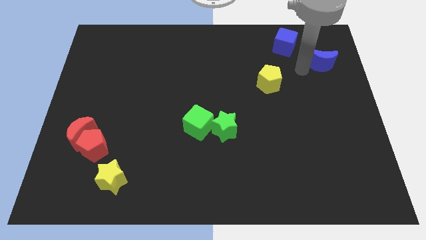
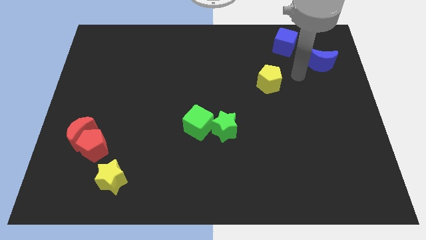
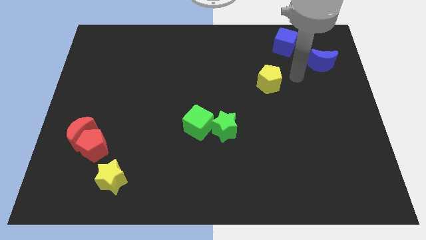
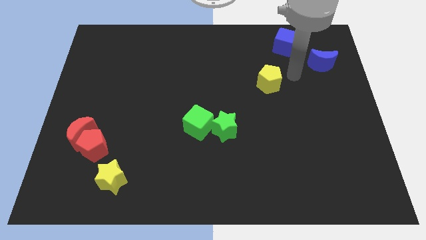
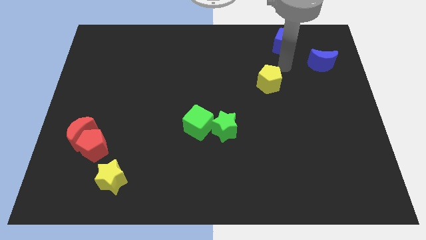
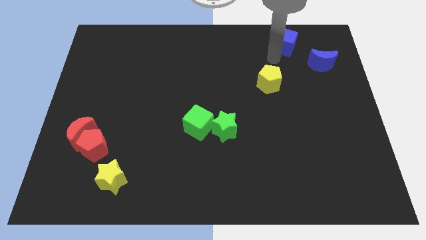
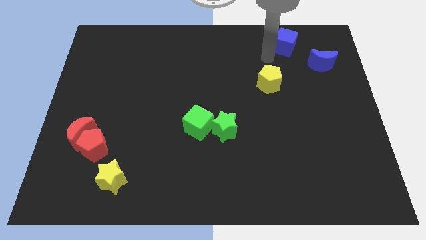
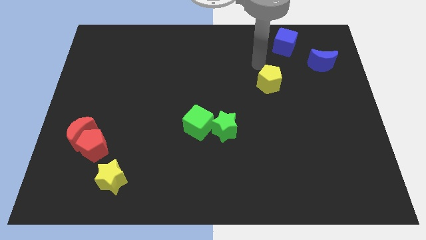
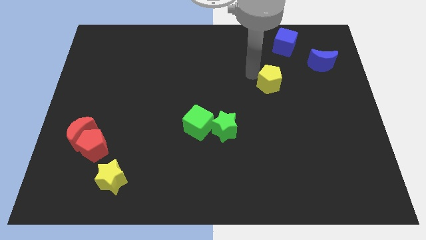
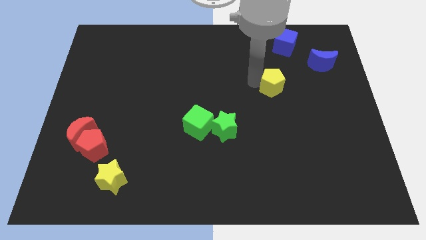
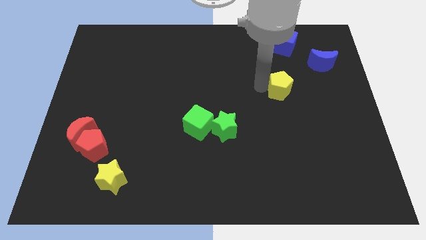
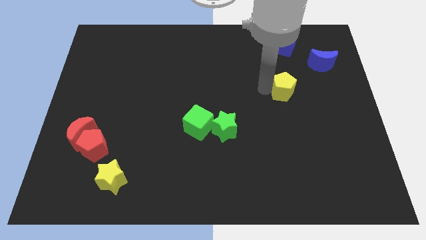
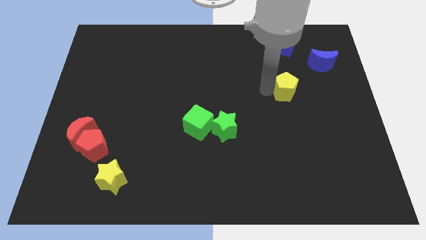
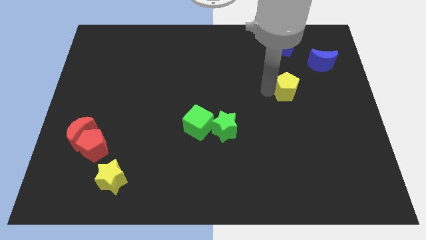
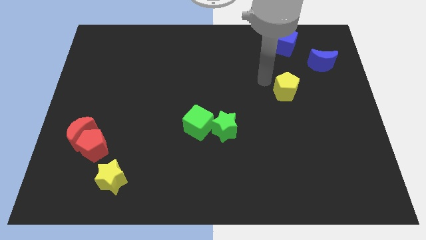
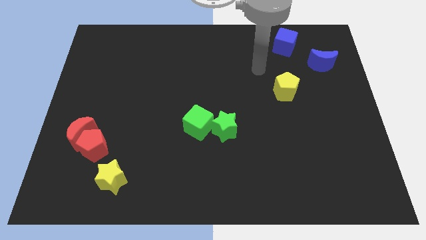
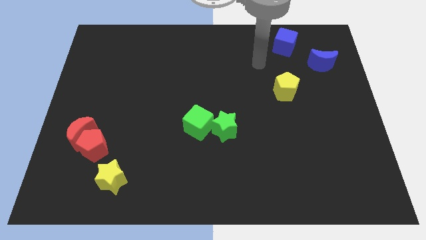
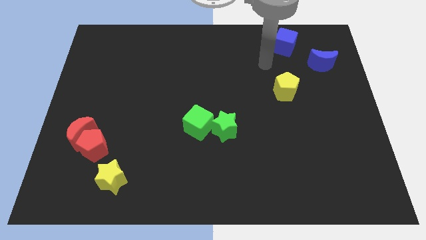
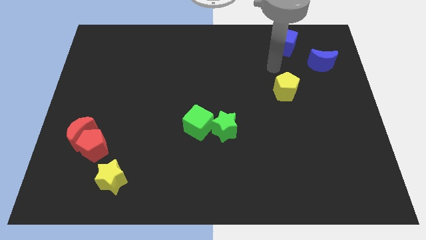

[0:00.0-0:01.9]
slightly move the yellow pentagon to the right side

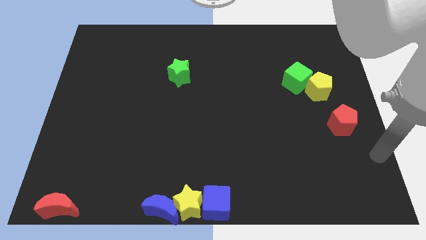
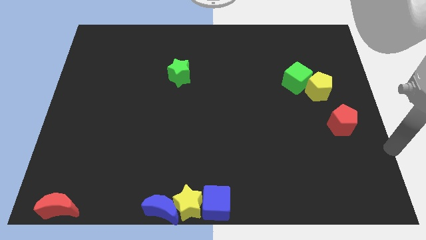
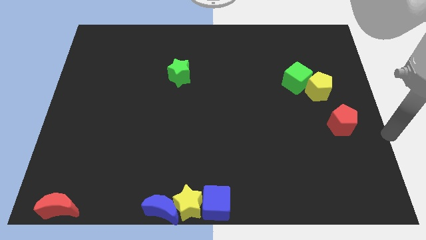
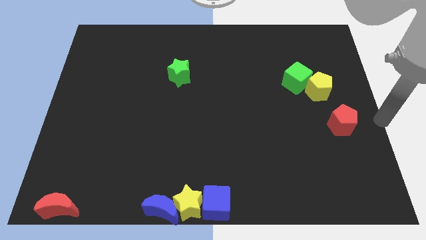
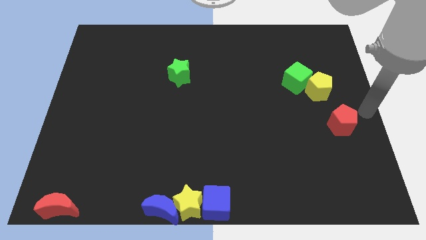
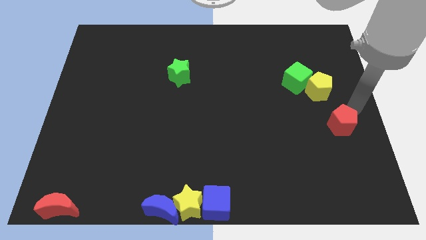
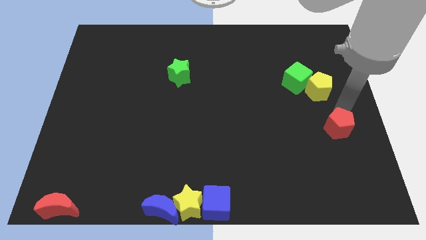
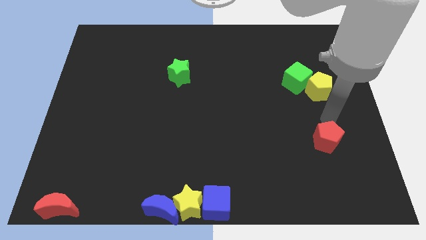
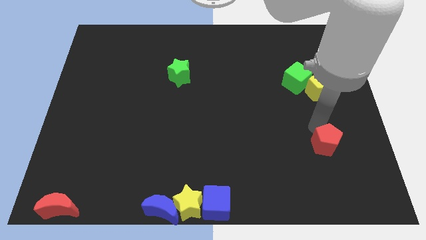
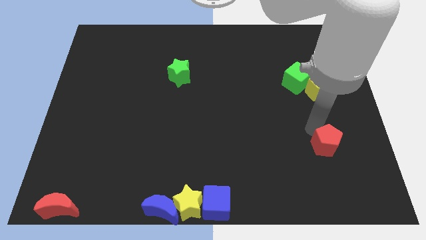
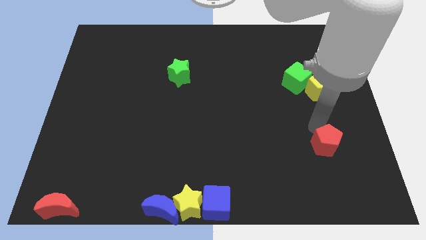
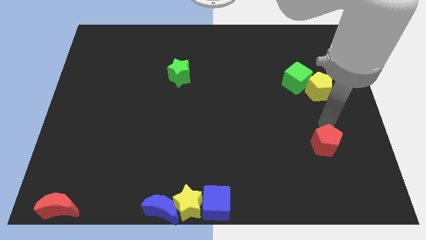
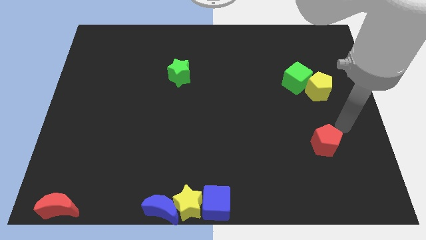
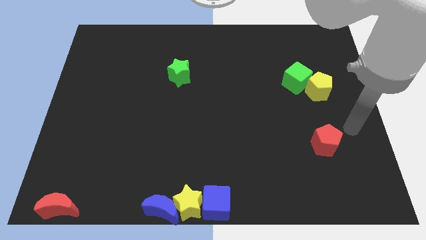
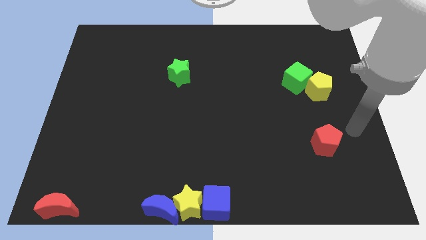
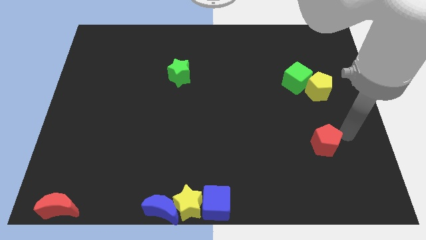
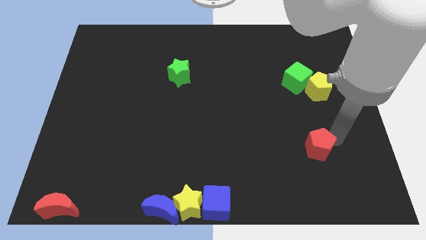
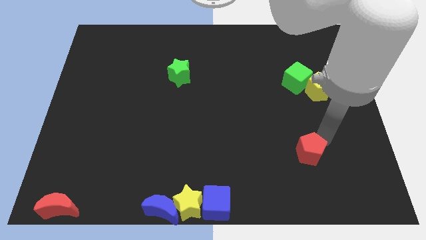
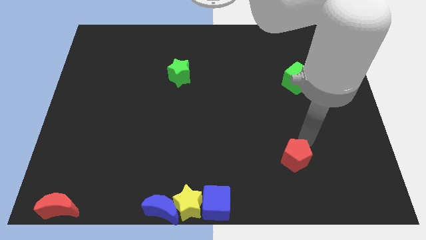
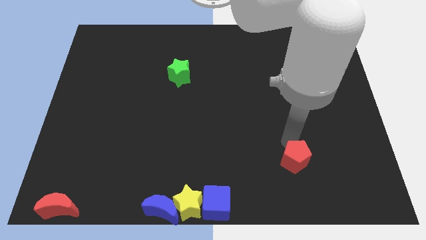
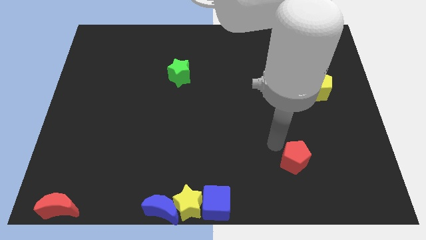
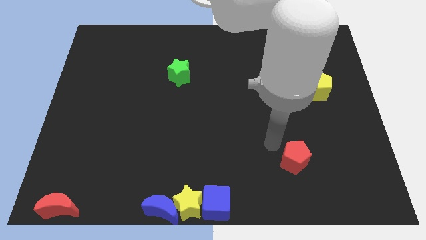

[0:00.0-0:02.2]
push the red pentagon towards the bottom side

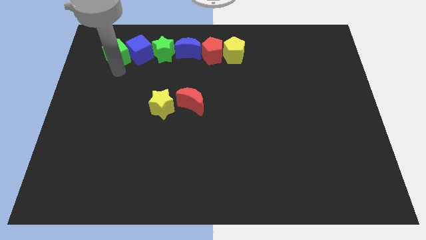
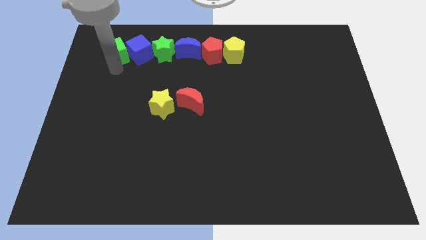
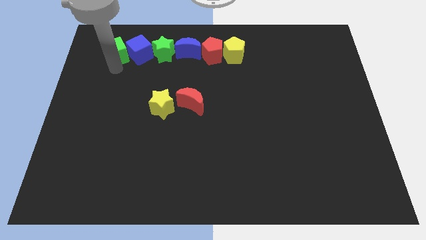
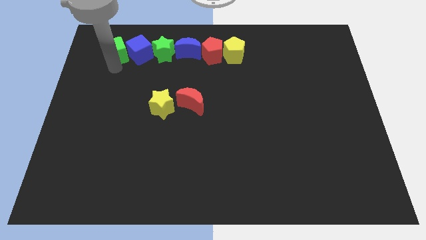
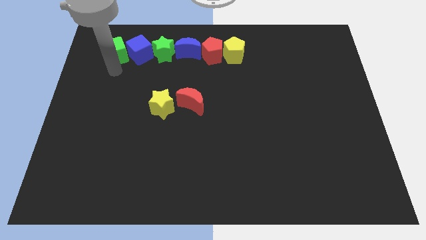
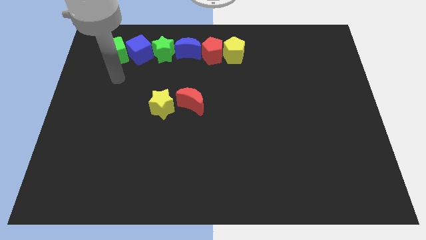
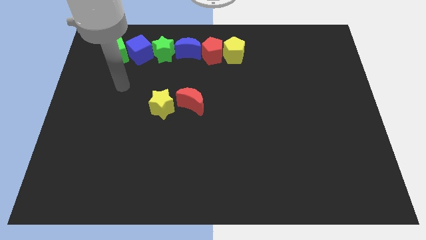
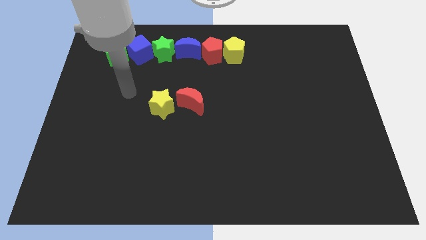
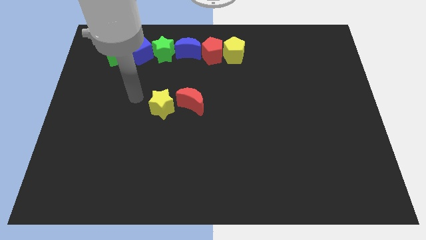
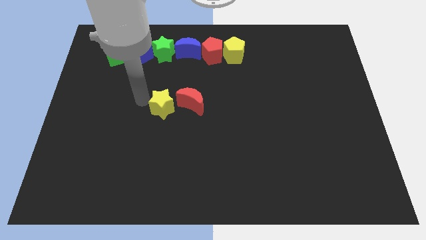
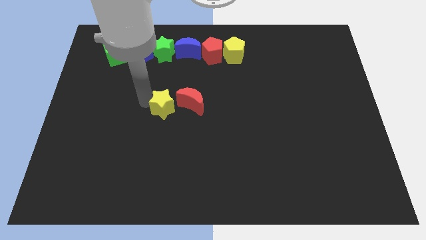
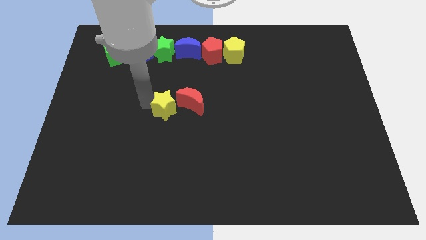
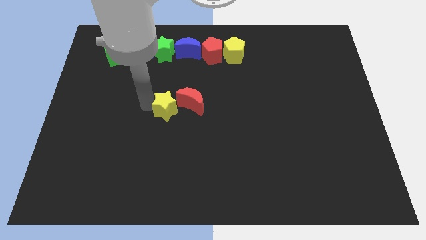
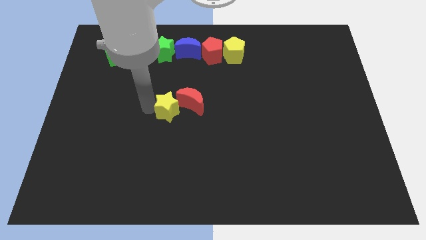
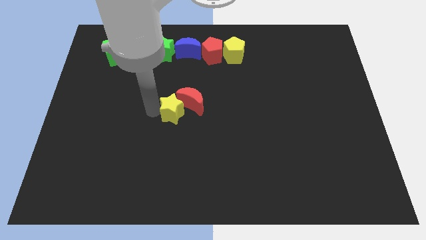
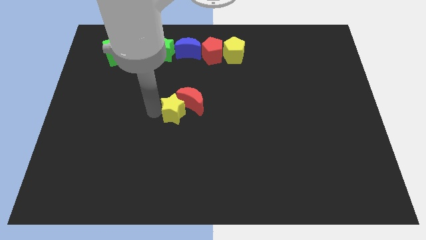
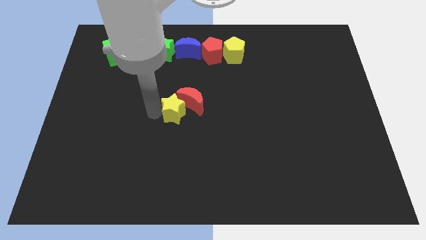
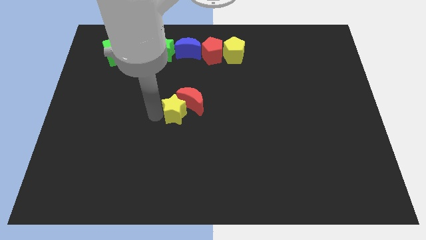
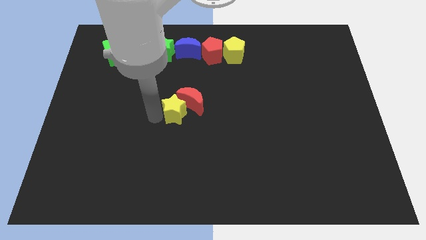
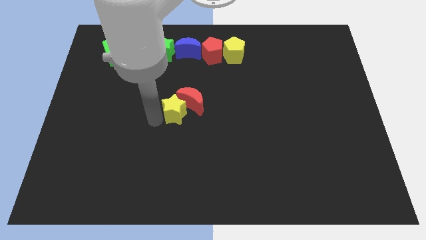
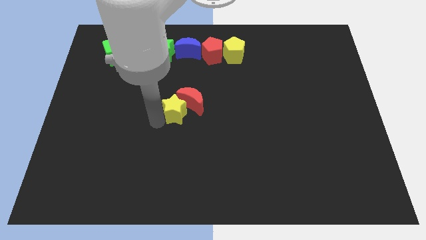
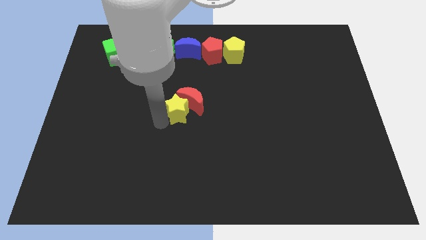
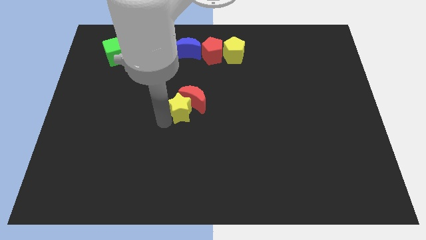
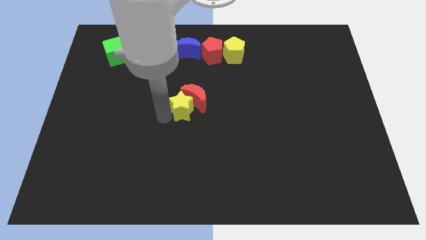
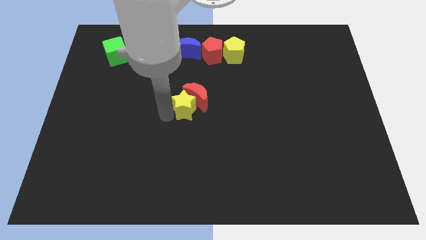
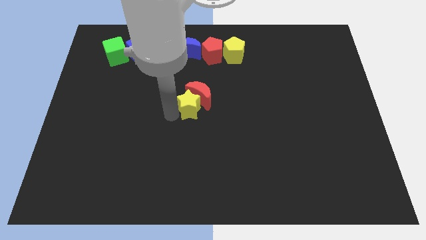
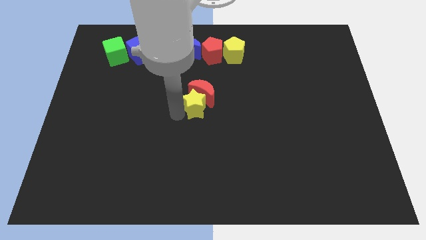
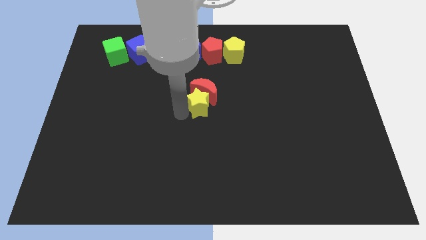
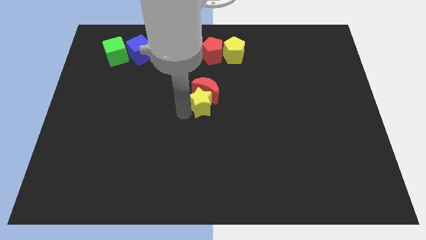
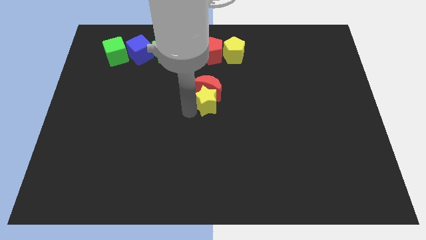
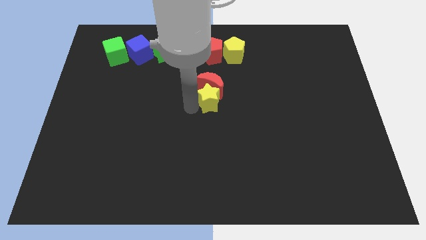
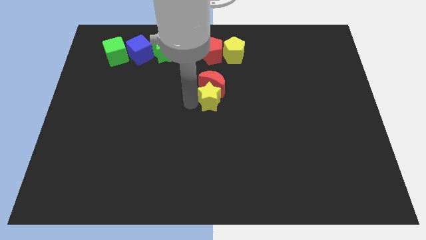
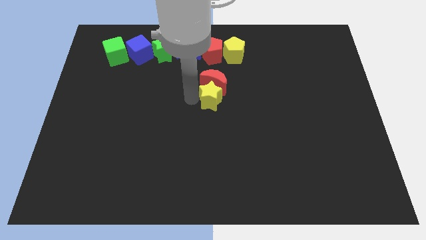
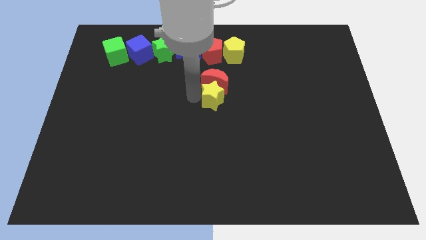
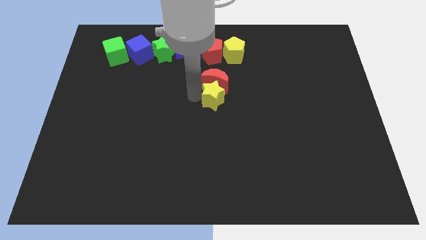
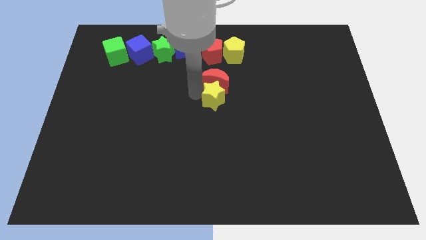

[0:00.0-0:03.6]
place yellow star below red moon

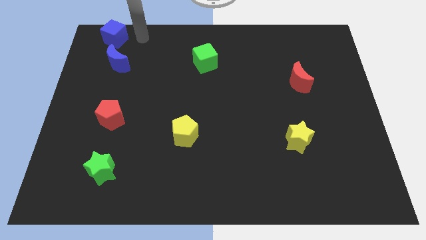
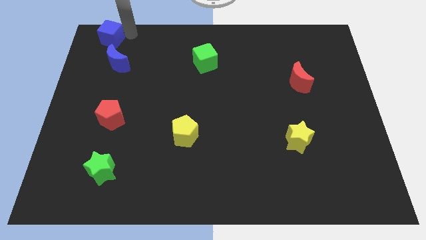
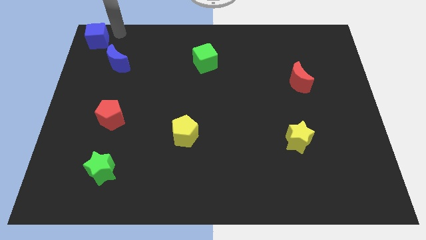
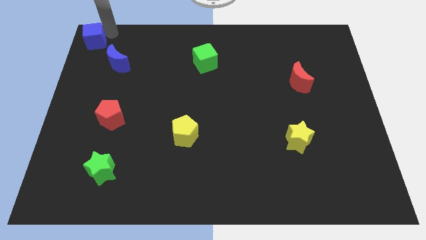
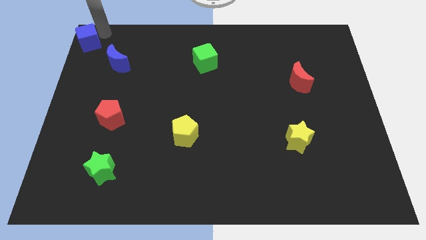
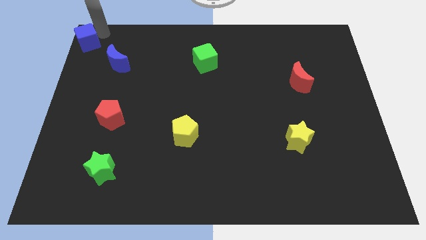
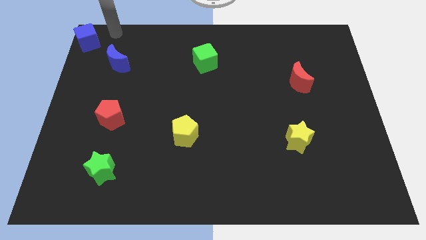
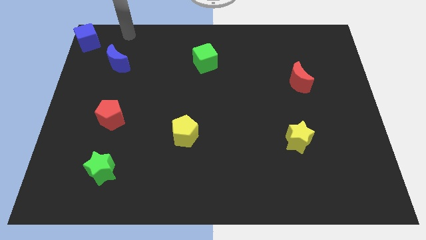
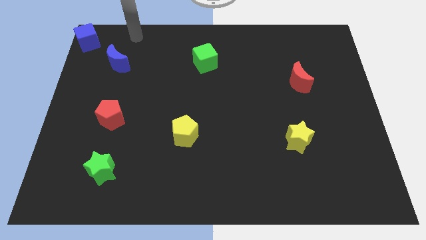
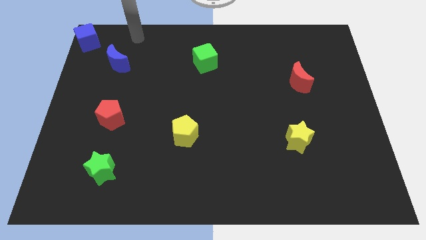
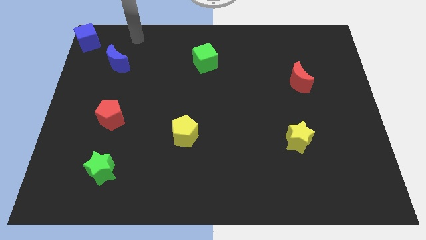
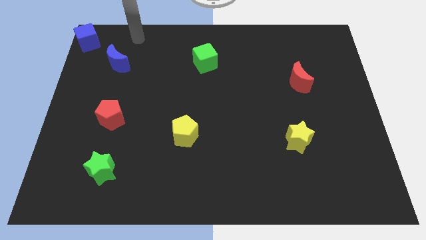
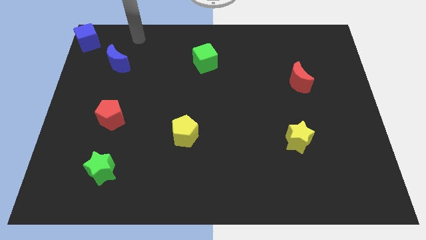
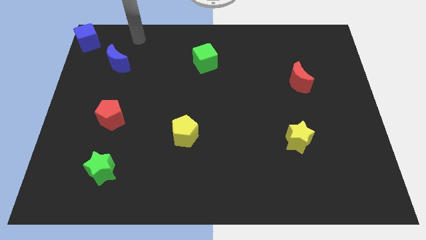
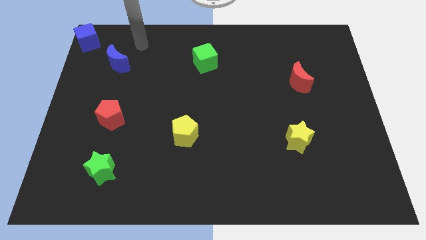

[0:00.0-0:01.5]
slide the blue moon to the top left corner
